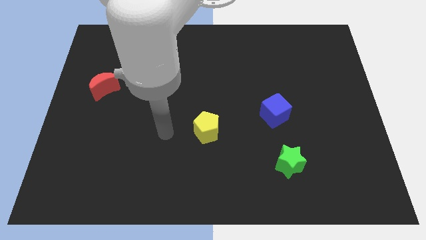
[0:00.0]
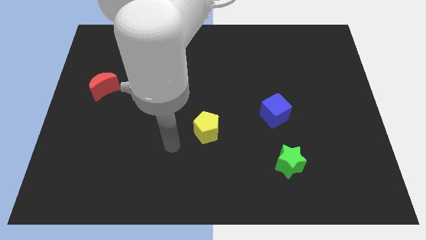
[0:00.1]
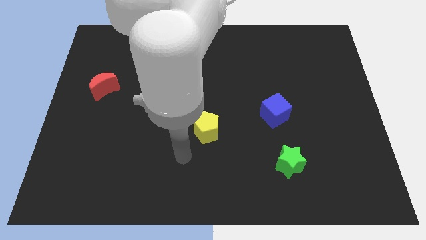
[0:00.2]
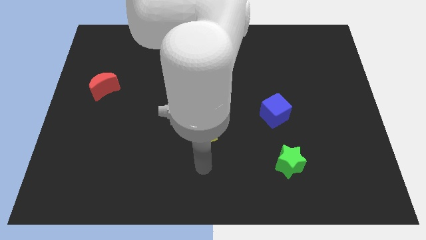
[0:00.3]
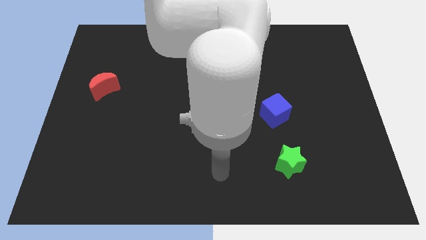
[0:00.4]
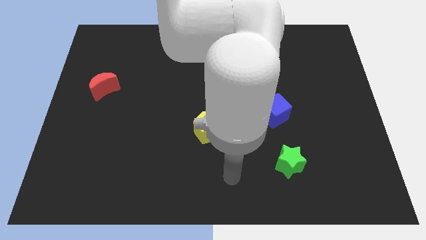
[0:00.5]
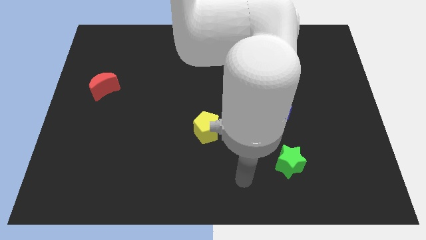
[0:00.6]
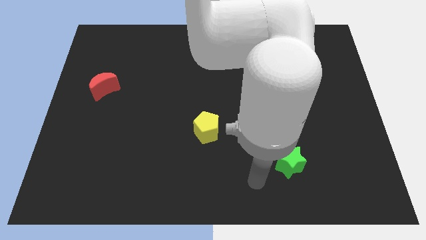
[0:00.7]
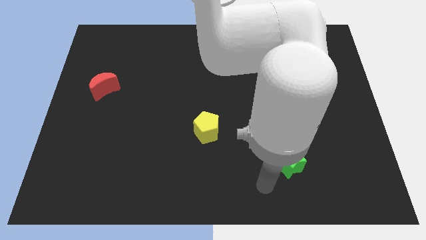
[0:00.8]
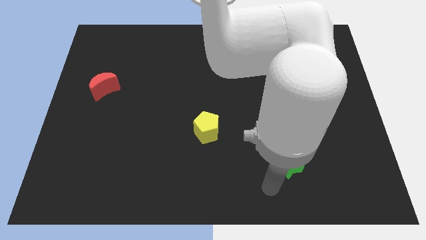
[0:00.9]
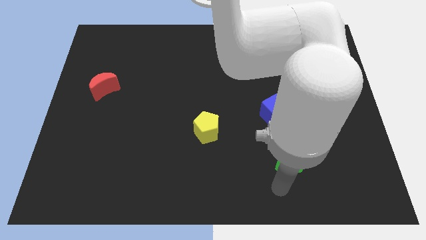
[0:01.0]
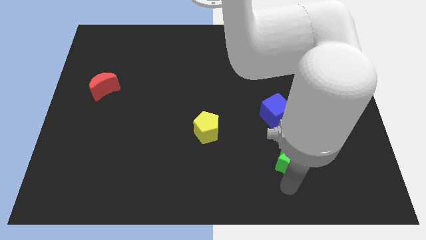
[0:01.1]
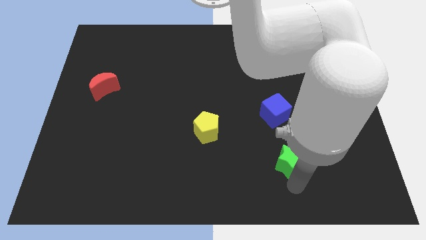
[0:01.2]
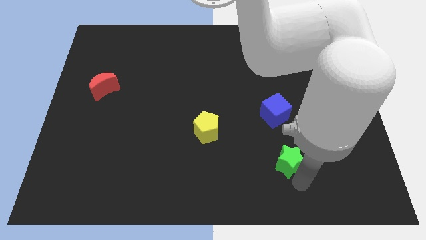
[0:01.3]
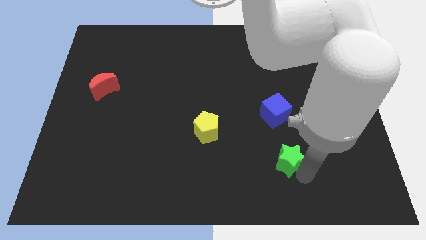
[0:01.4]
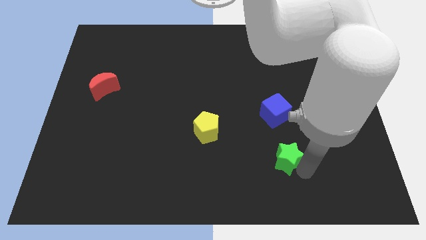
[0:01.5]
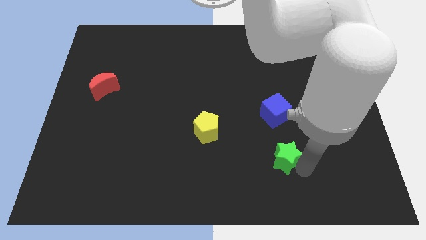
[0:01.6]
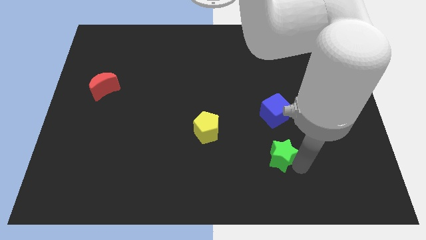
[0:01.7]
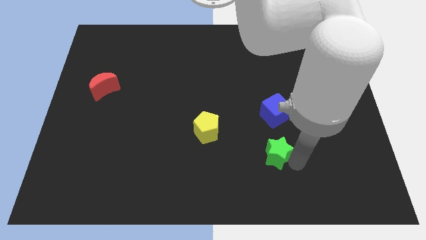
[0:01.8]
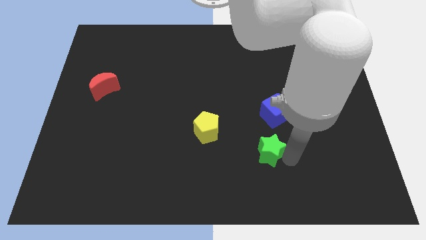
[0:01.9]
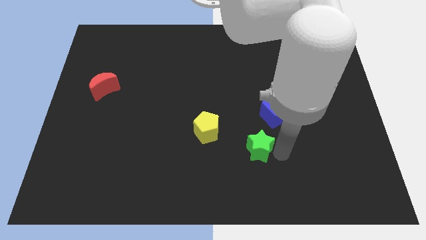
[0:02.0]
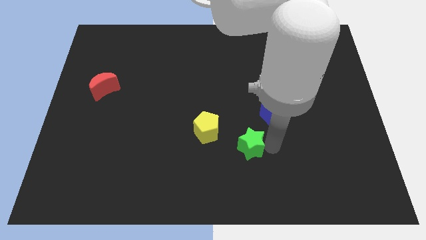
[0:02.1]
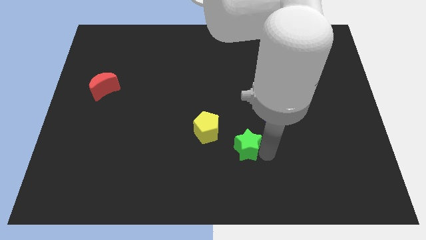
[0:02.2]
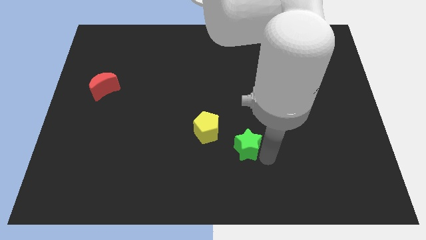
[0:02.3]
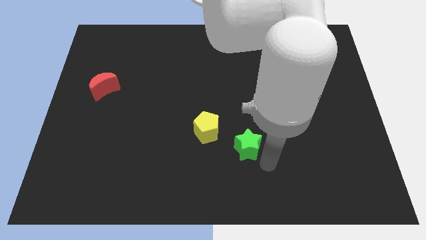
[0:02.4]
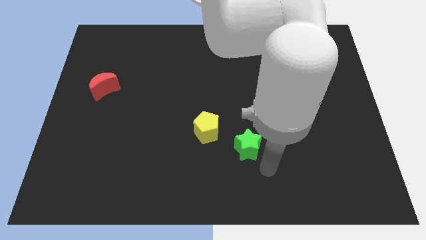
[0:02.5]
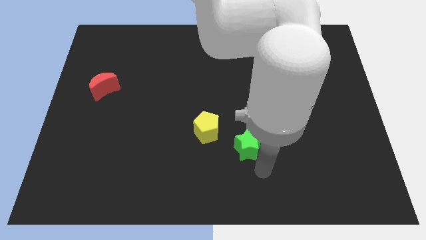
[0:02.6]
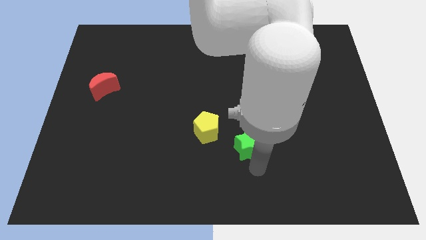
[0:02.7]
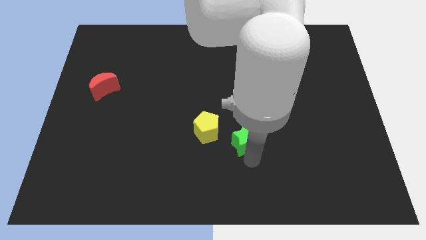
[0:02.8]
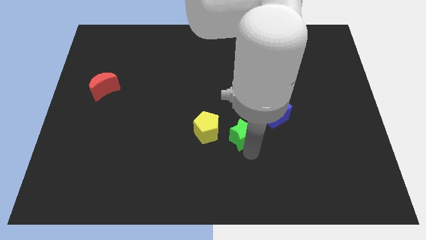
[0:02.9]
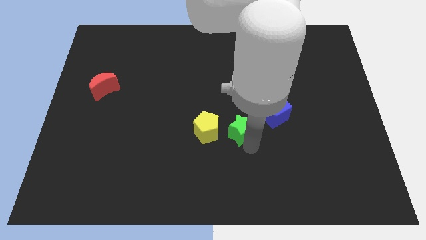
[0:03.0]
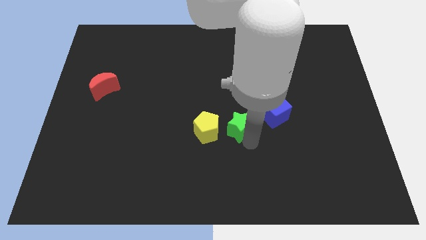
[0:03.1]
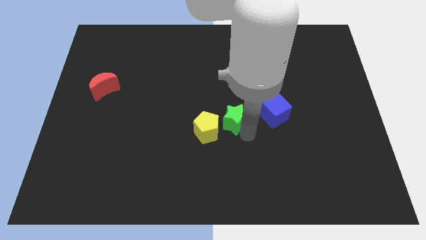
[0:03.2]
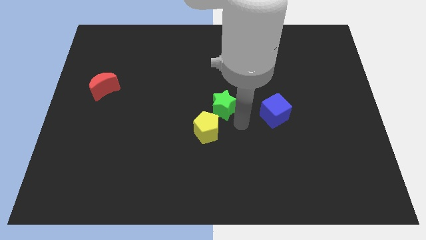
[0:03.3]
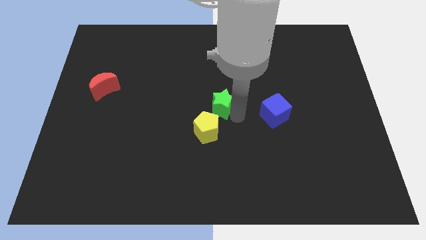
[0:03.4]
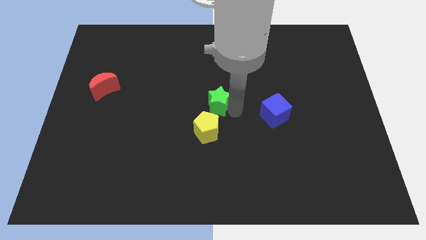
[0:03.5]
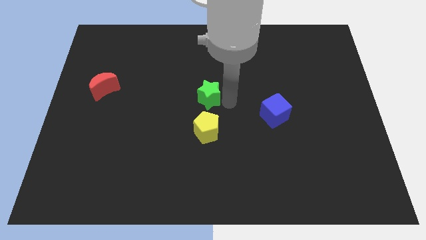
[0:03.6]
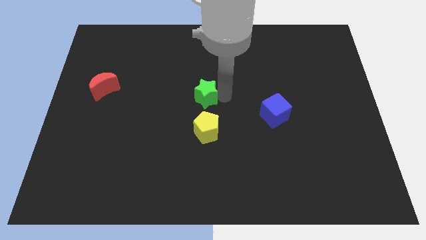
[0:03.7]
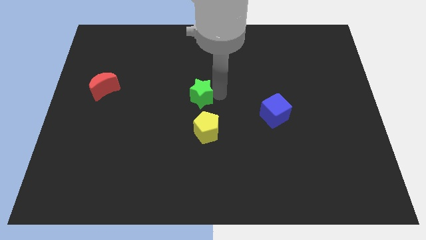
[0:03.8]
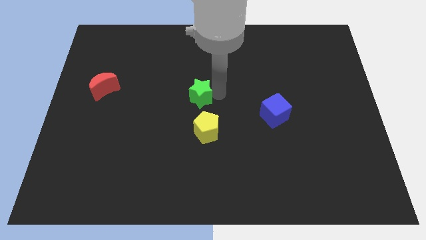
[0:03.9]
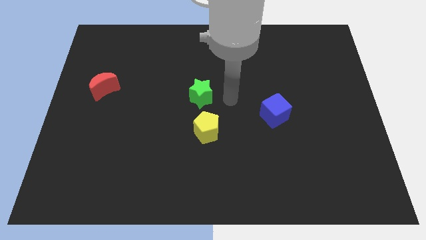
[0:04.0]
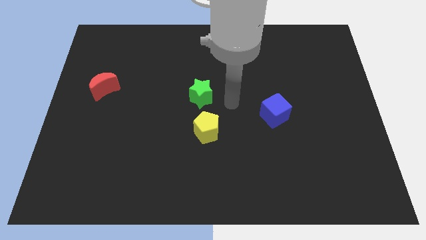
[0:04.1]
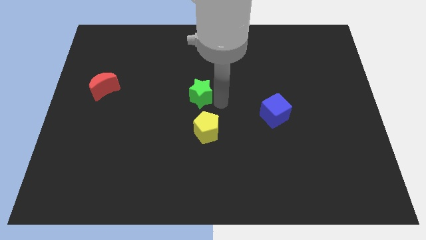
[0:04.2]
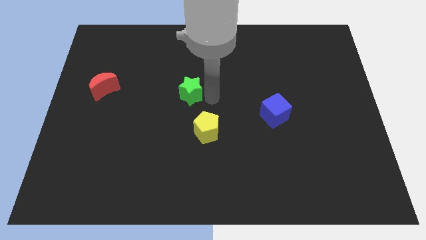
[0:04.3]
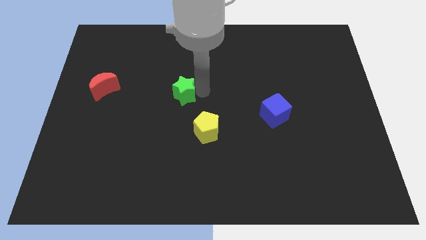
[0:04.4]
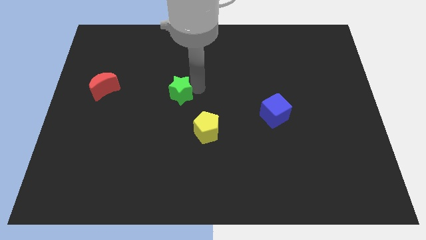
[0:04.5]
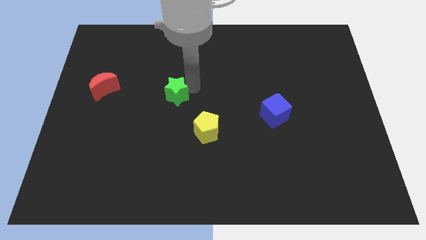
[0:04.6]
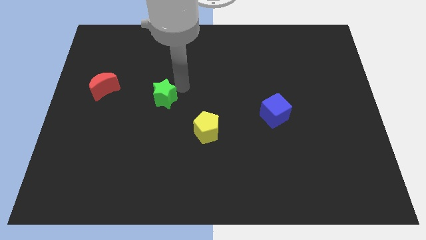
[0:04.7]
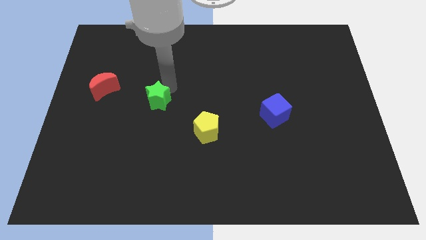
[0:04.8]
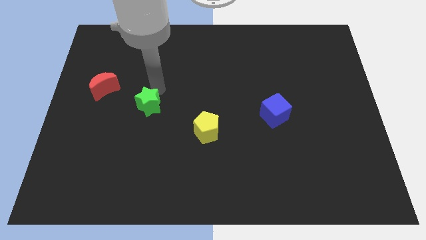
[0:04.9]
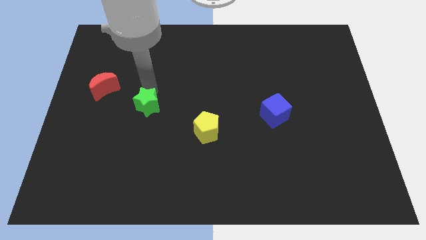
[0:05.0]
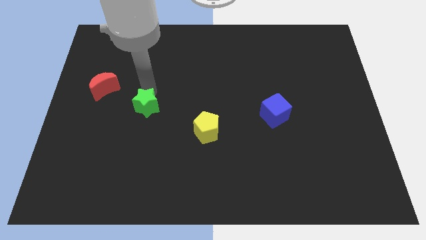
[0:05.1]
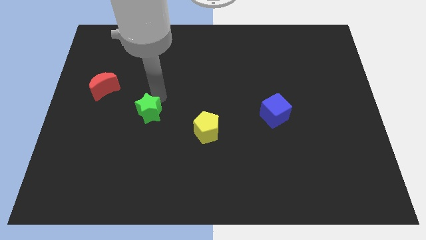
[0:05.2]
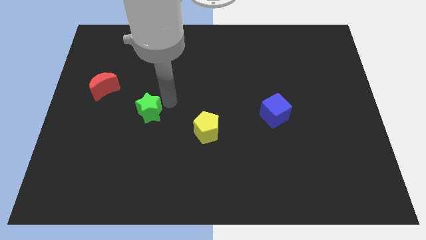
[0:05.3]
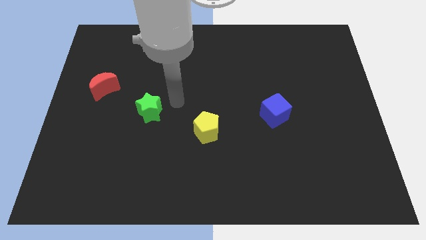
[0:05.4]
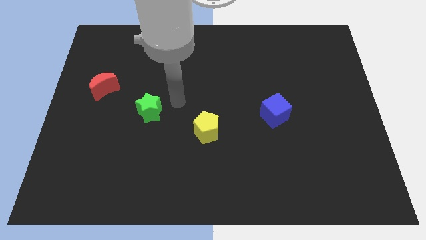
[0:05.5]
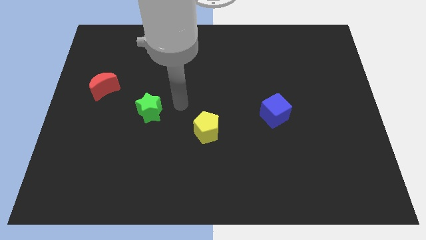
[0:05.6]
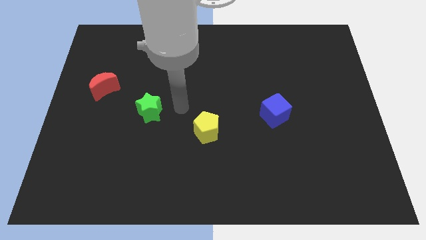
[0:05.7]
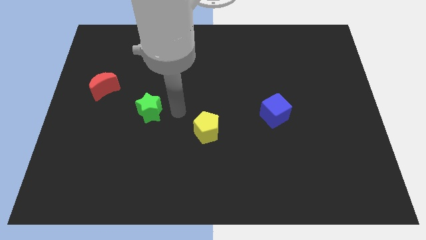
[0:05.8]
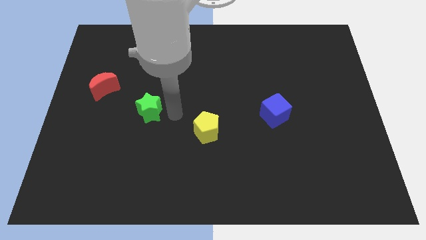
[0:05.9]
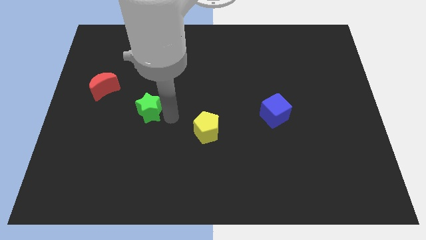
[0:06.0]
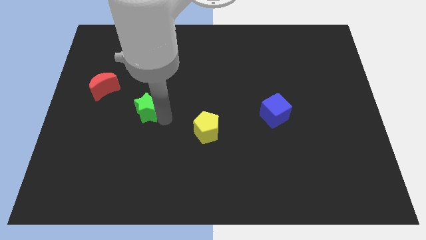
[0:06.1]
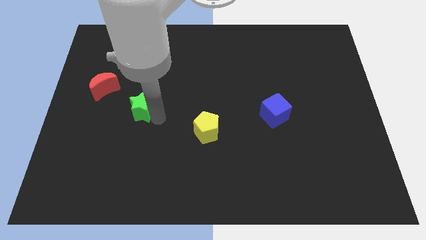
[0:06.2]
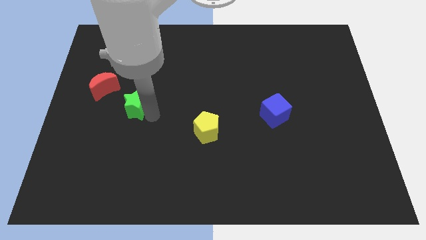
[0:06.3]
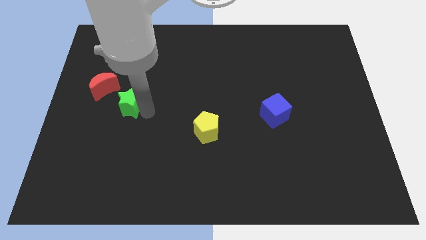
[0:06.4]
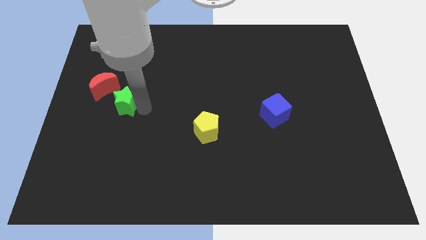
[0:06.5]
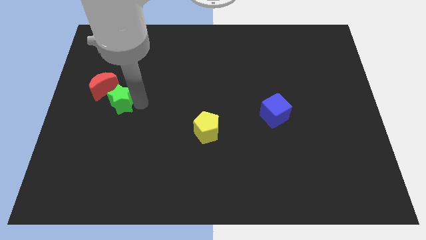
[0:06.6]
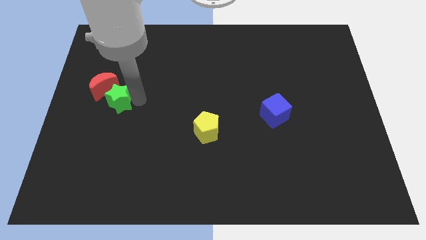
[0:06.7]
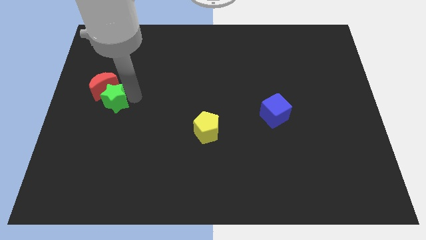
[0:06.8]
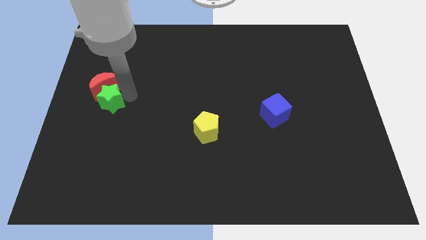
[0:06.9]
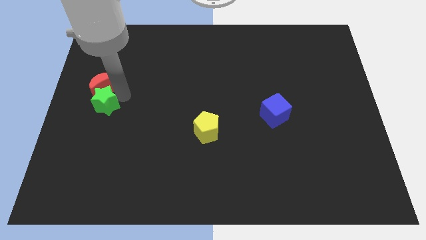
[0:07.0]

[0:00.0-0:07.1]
put the green block close to the red block

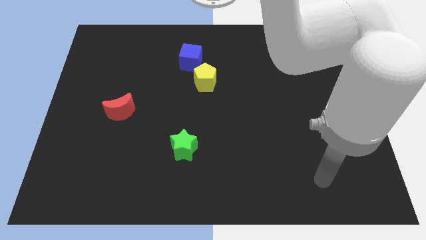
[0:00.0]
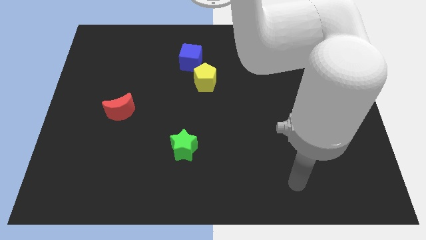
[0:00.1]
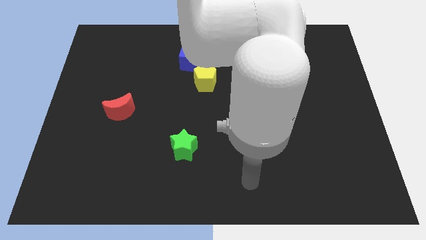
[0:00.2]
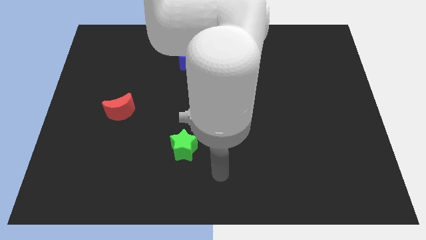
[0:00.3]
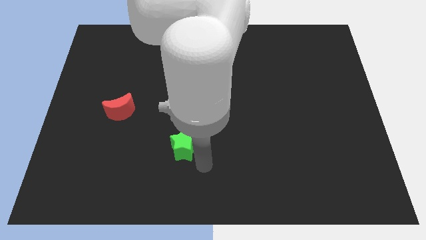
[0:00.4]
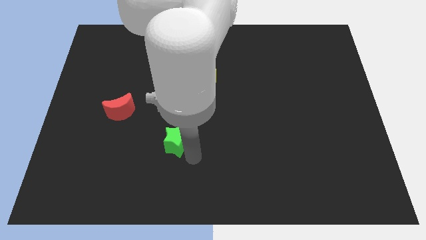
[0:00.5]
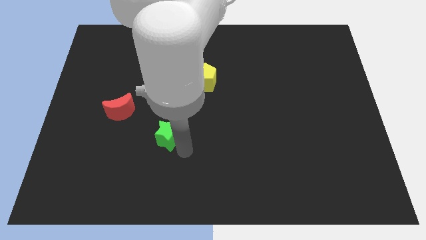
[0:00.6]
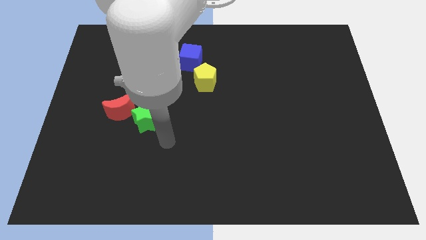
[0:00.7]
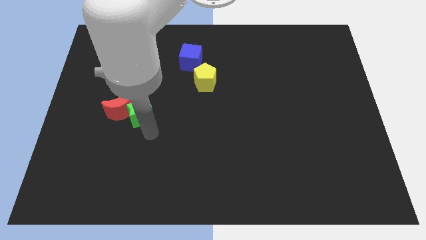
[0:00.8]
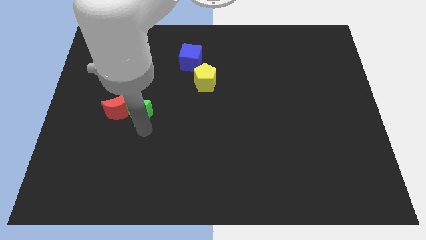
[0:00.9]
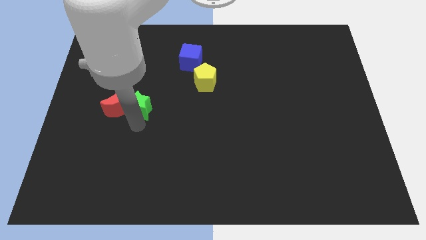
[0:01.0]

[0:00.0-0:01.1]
move the star towards the red moon

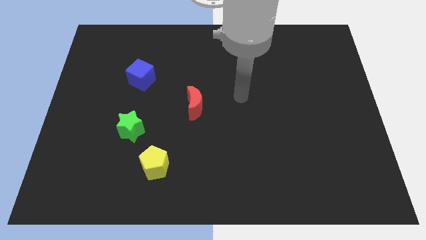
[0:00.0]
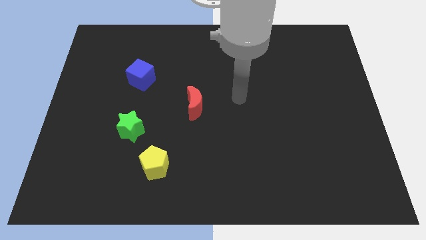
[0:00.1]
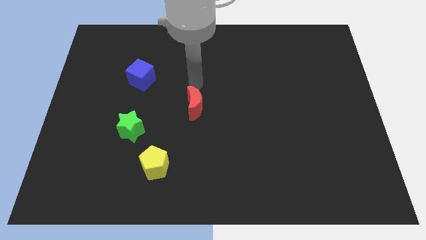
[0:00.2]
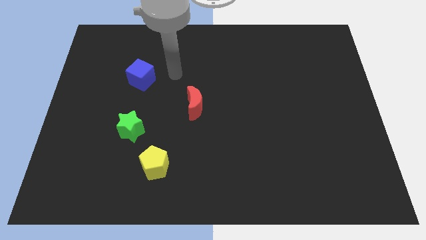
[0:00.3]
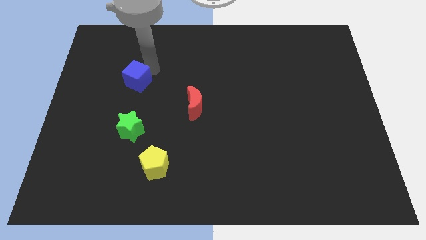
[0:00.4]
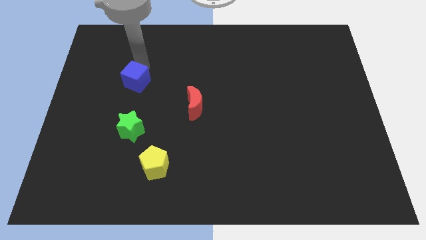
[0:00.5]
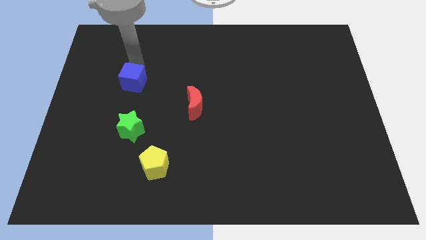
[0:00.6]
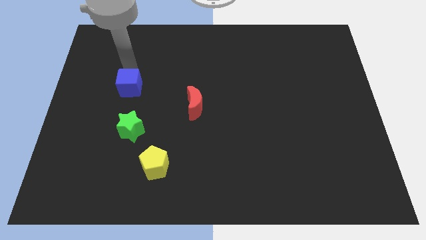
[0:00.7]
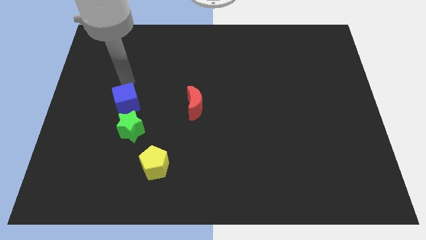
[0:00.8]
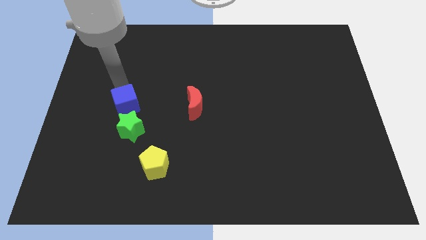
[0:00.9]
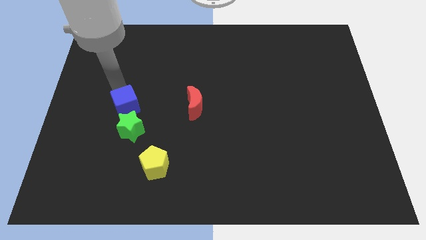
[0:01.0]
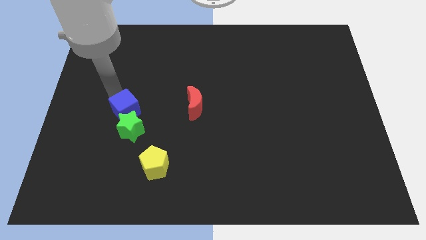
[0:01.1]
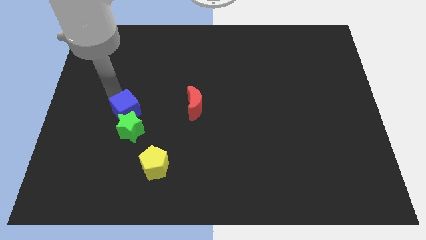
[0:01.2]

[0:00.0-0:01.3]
put the blue cube towards the green block
